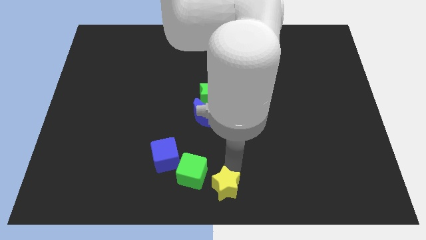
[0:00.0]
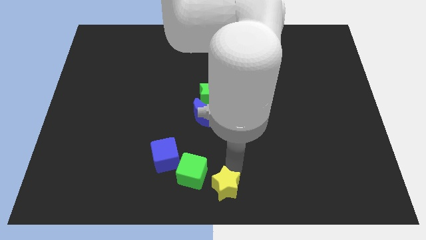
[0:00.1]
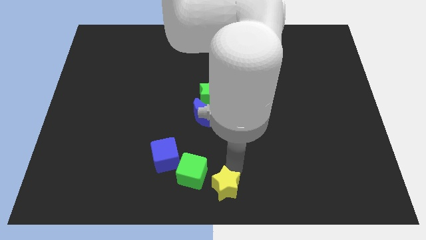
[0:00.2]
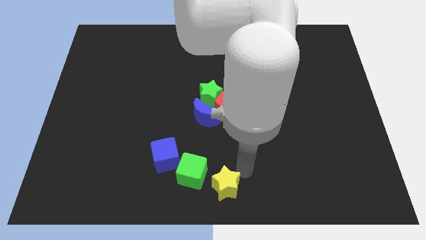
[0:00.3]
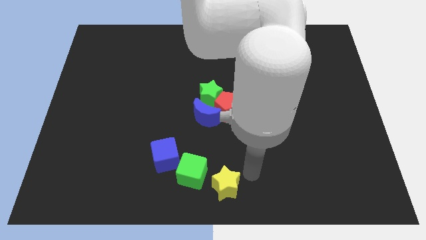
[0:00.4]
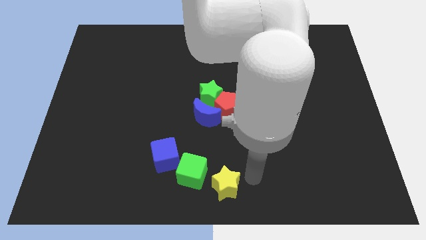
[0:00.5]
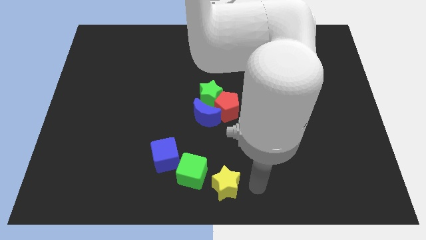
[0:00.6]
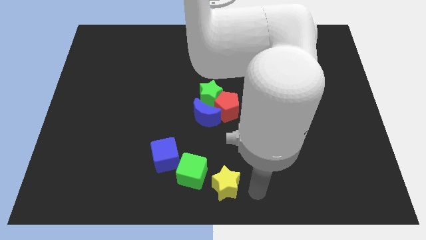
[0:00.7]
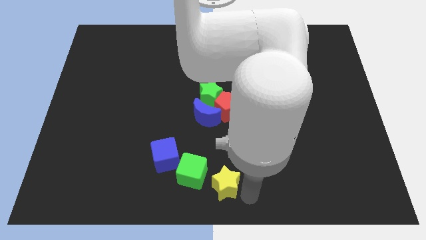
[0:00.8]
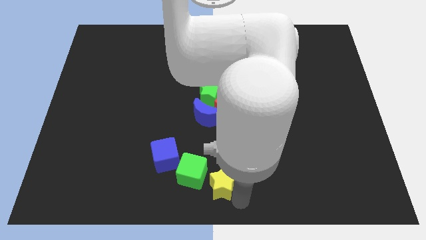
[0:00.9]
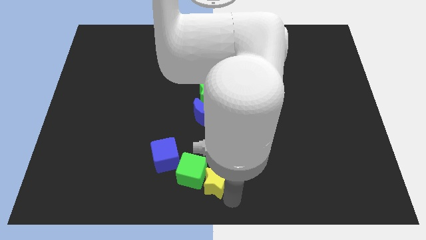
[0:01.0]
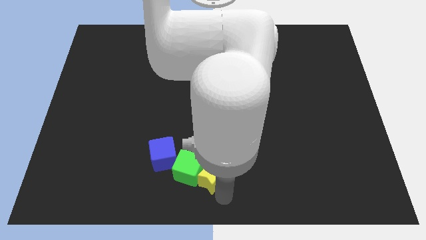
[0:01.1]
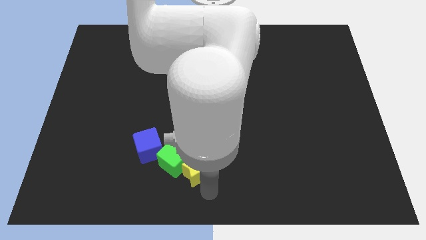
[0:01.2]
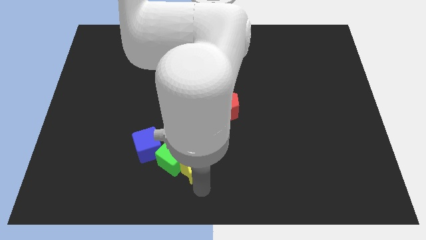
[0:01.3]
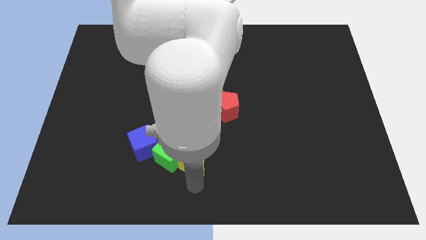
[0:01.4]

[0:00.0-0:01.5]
move the yellow star to the left

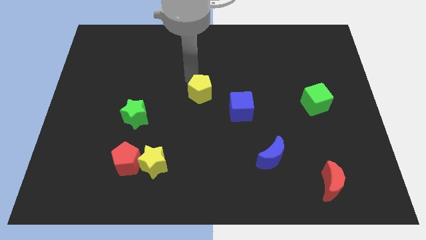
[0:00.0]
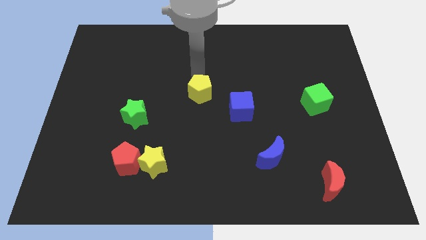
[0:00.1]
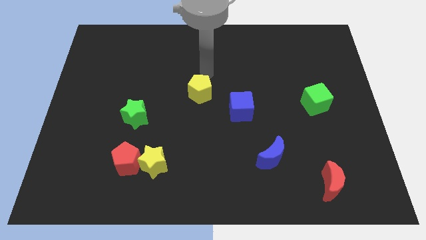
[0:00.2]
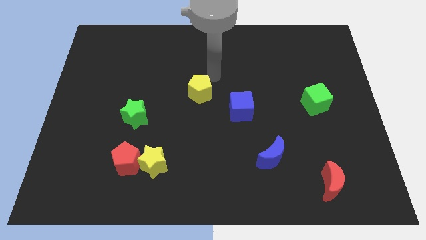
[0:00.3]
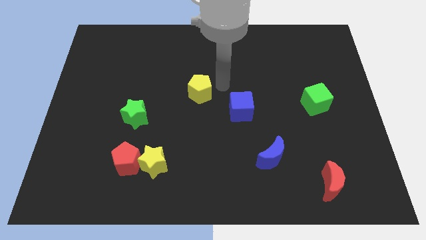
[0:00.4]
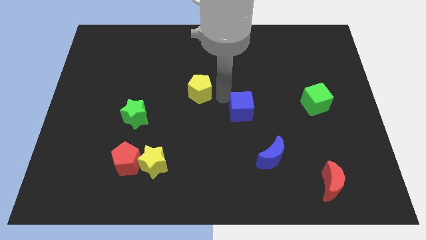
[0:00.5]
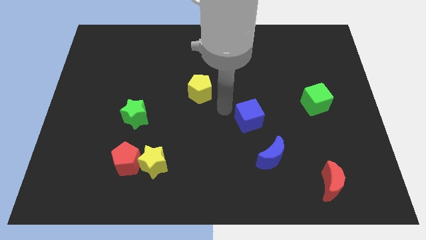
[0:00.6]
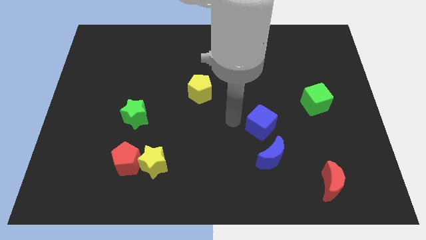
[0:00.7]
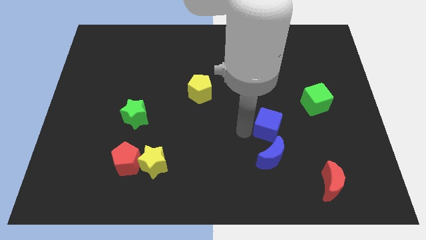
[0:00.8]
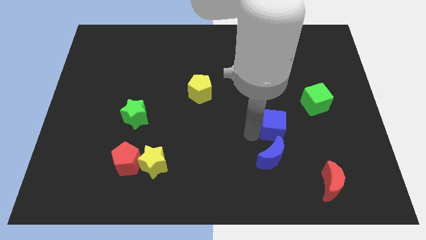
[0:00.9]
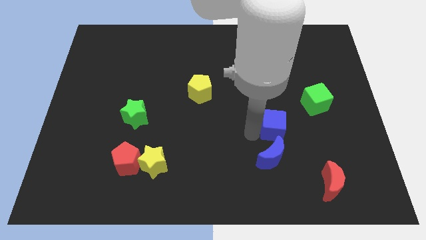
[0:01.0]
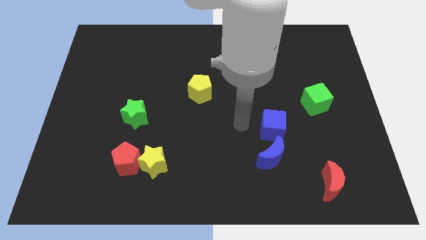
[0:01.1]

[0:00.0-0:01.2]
place the blue cube above the blue moon

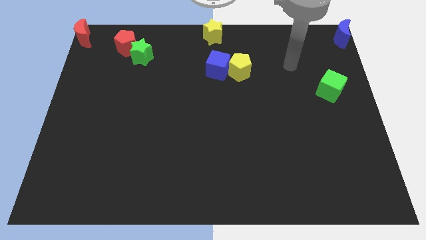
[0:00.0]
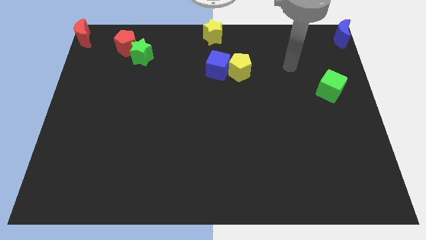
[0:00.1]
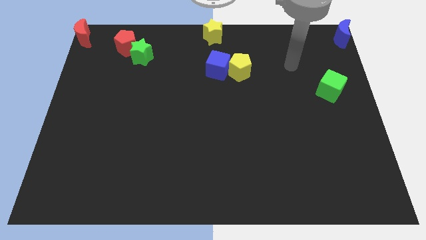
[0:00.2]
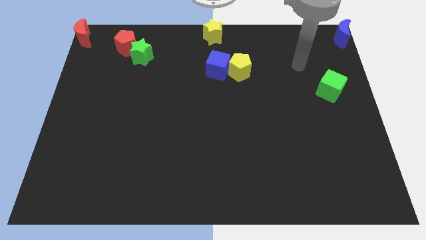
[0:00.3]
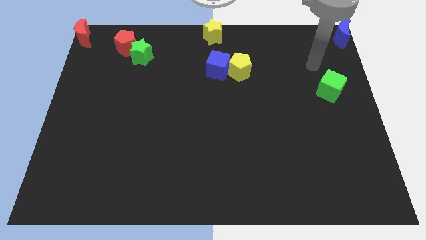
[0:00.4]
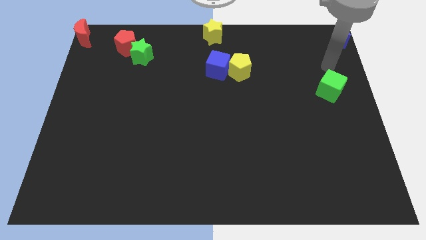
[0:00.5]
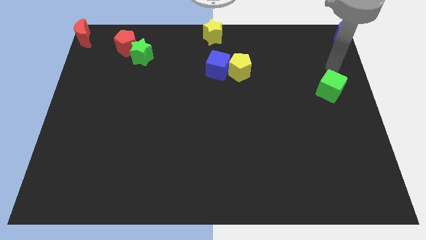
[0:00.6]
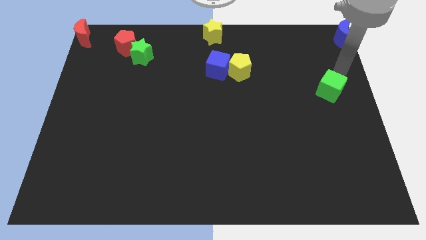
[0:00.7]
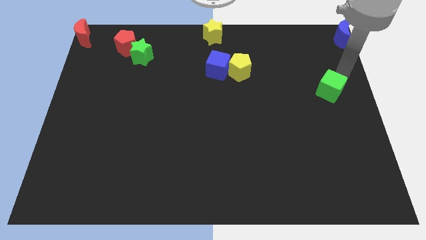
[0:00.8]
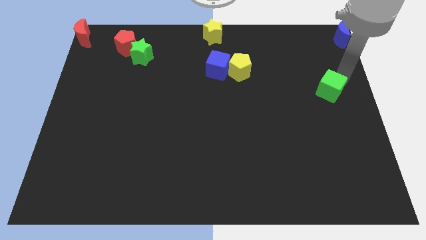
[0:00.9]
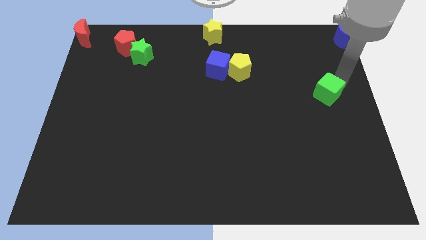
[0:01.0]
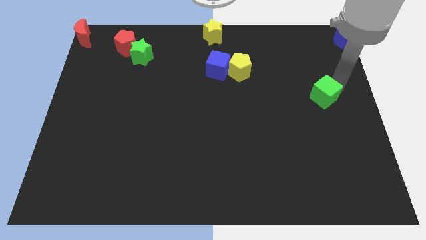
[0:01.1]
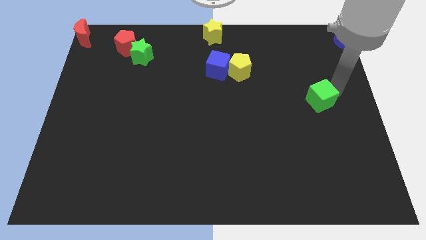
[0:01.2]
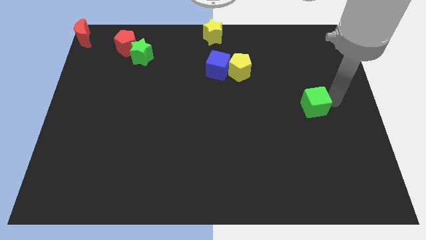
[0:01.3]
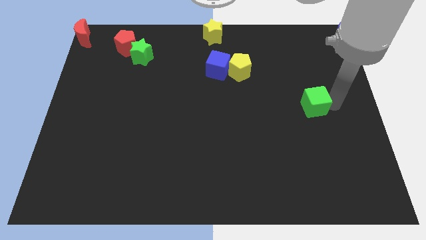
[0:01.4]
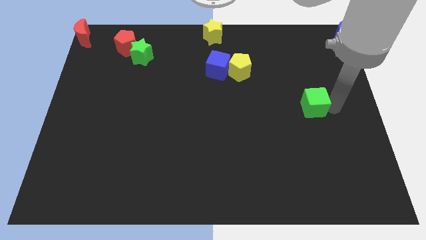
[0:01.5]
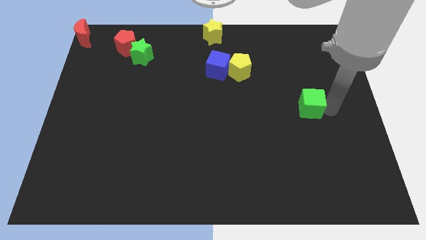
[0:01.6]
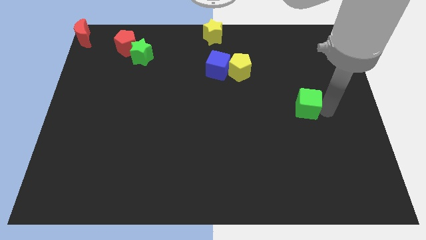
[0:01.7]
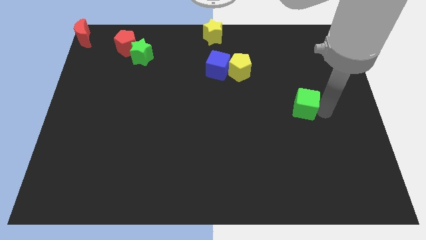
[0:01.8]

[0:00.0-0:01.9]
push the green cube slightly to the bottom of the board

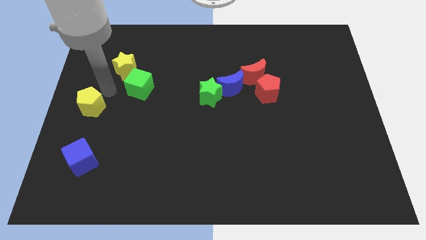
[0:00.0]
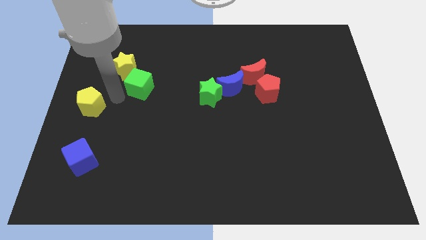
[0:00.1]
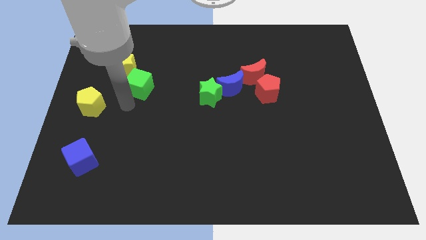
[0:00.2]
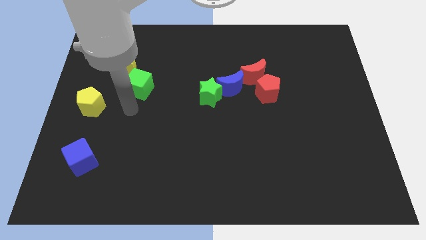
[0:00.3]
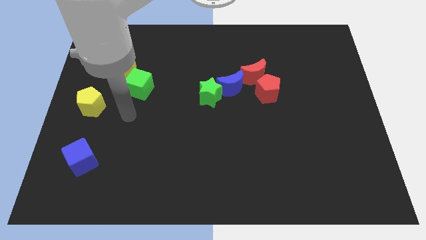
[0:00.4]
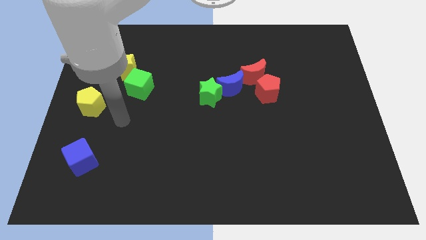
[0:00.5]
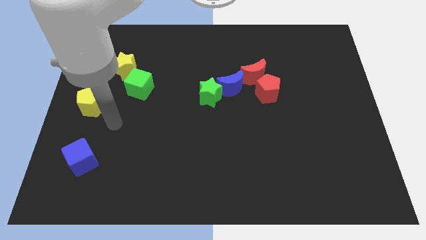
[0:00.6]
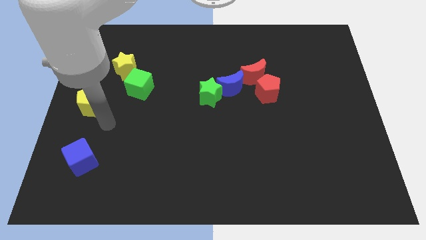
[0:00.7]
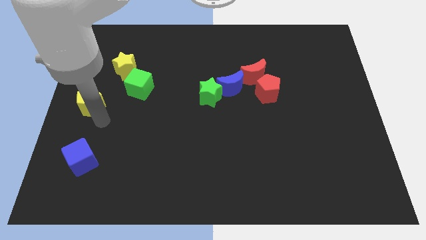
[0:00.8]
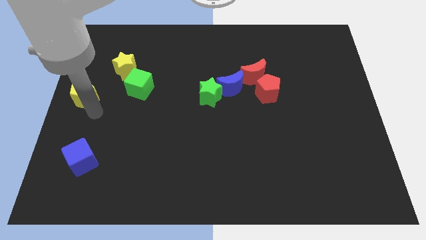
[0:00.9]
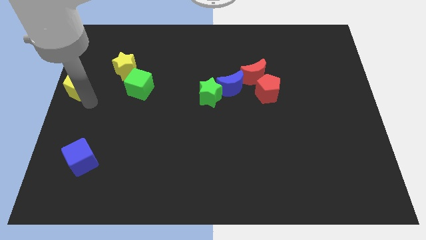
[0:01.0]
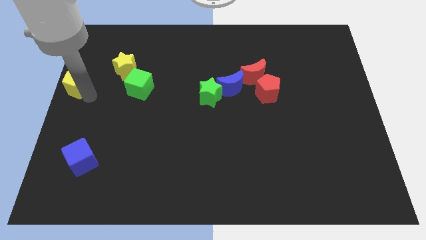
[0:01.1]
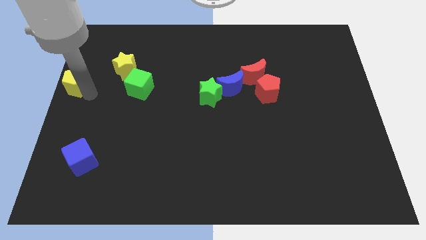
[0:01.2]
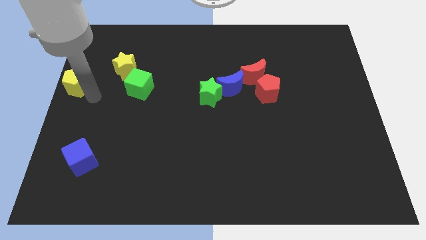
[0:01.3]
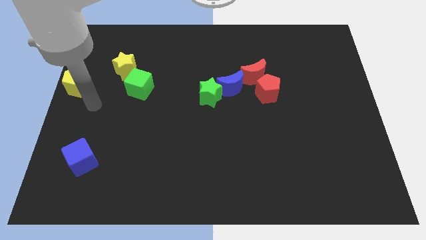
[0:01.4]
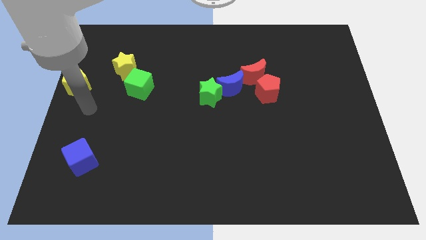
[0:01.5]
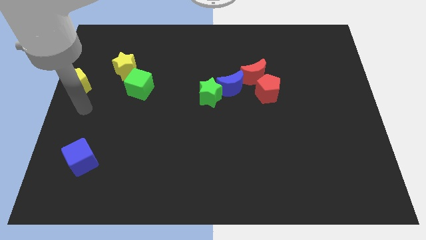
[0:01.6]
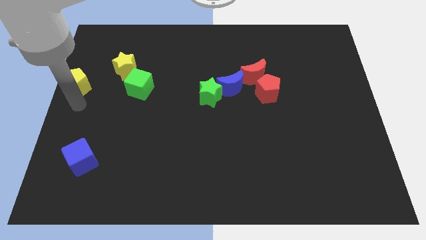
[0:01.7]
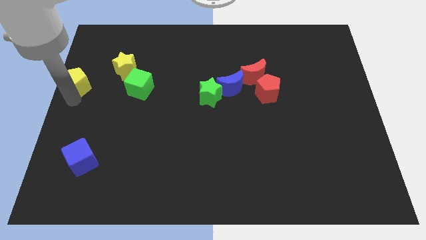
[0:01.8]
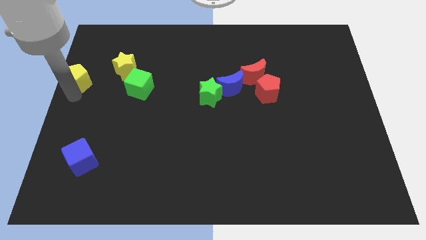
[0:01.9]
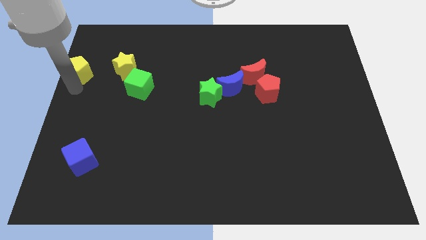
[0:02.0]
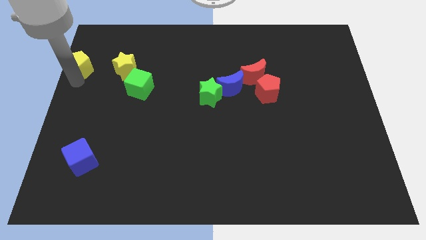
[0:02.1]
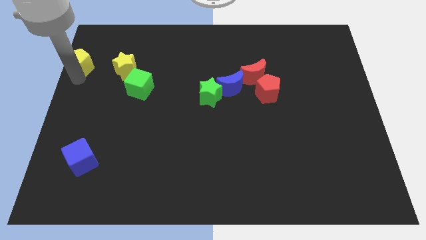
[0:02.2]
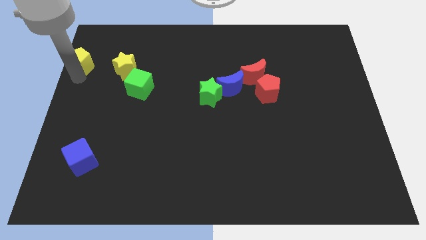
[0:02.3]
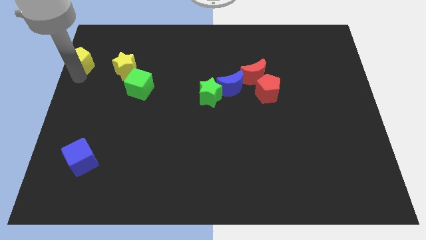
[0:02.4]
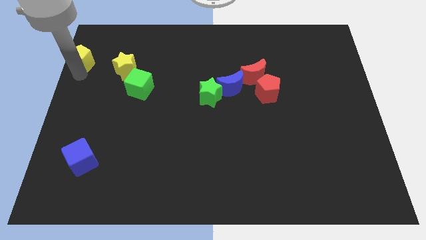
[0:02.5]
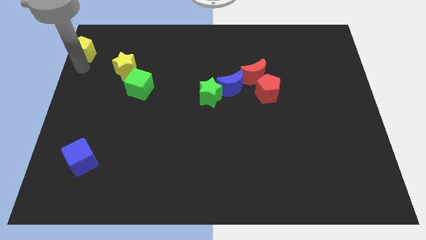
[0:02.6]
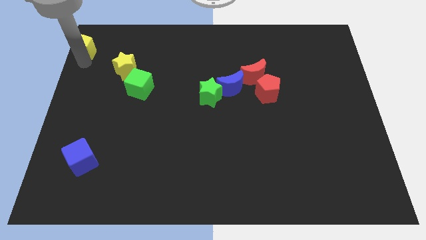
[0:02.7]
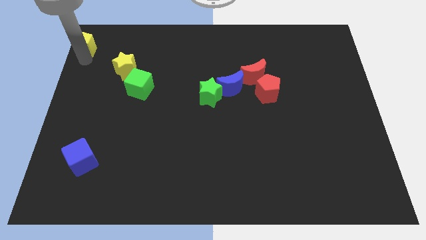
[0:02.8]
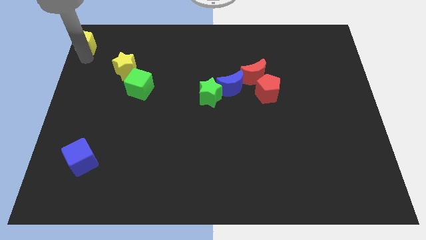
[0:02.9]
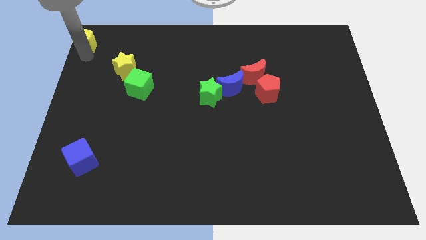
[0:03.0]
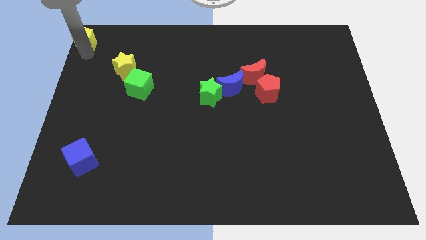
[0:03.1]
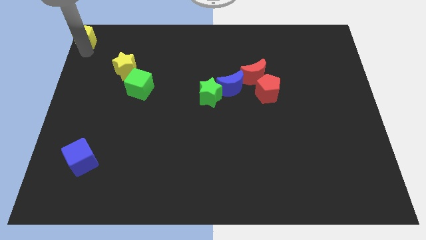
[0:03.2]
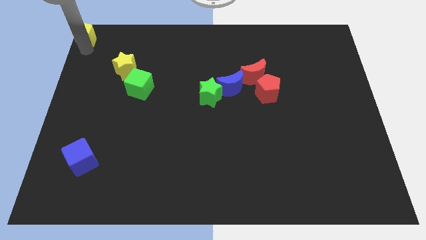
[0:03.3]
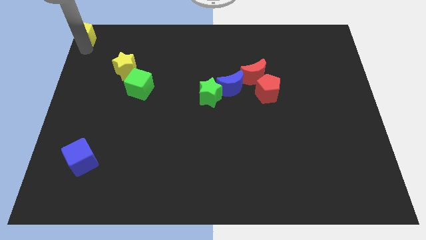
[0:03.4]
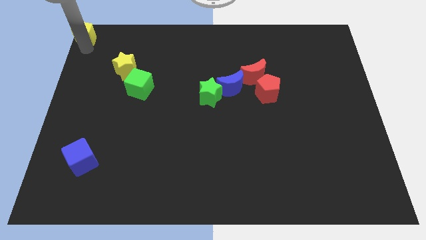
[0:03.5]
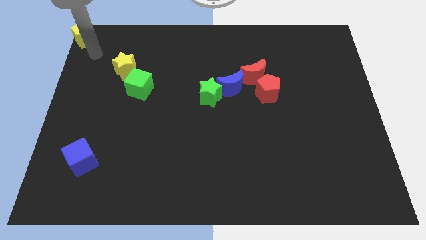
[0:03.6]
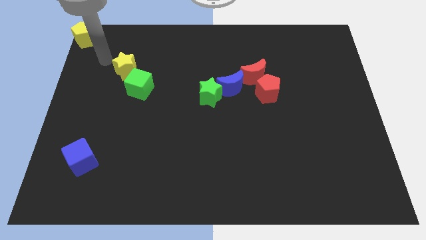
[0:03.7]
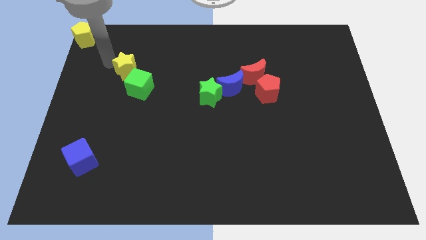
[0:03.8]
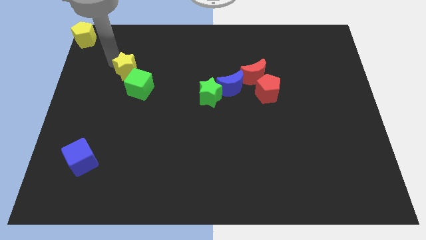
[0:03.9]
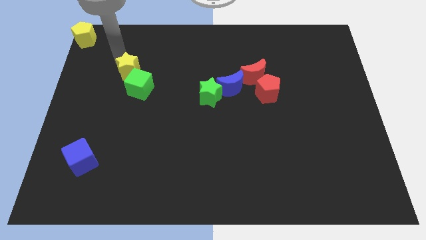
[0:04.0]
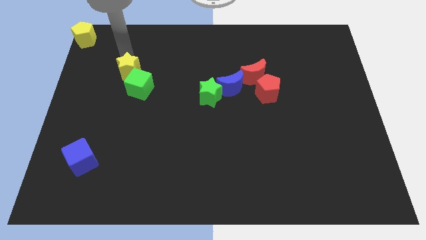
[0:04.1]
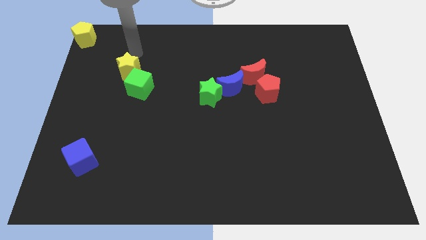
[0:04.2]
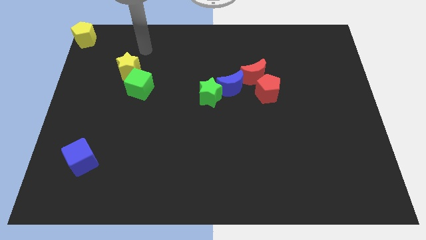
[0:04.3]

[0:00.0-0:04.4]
push the yellow pentagon to the top left corner of the board
